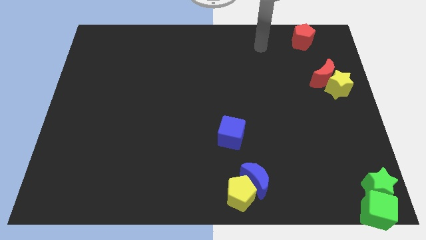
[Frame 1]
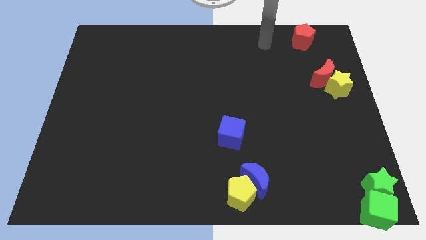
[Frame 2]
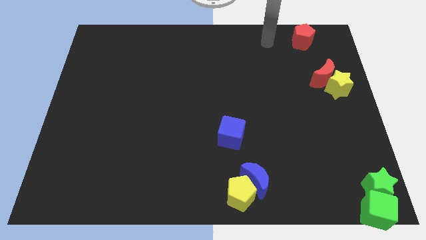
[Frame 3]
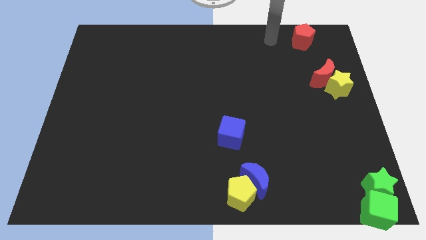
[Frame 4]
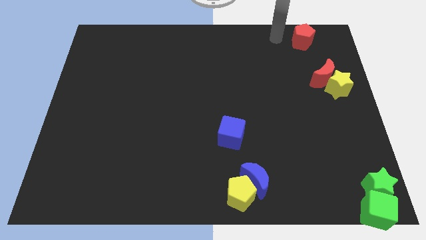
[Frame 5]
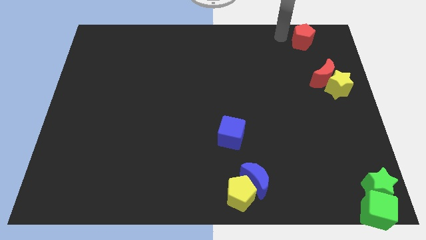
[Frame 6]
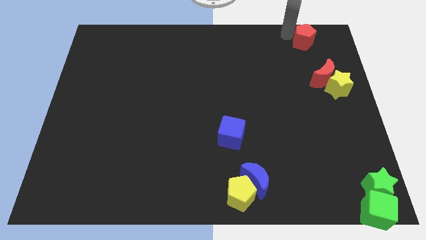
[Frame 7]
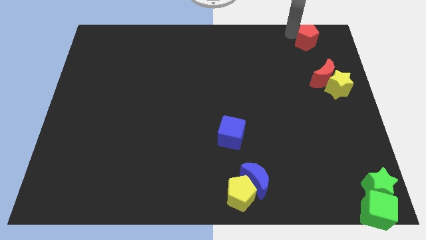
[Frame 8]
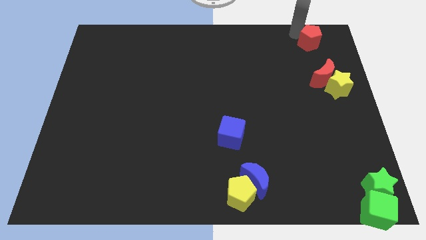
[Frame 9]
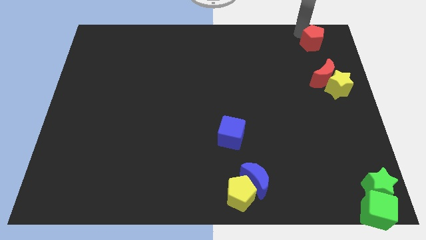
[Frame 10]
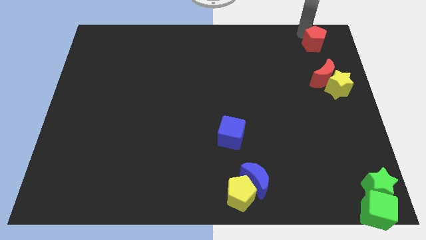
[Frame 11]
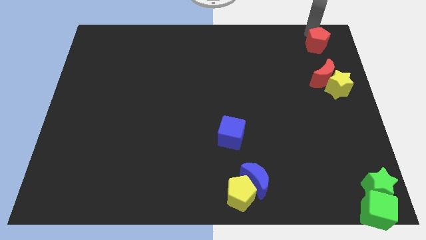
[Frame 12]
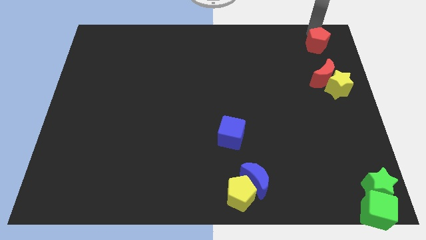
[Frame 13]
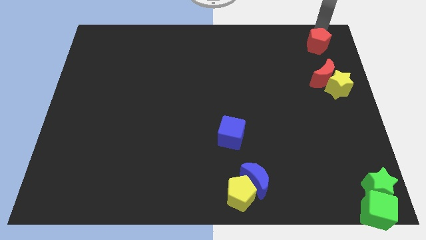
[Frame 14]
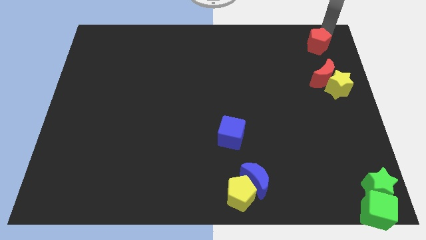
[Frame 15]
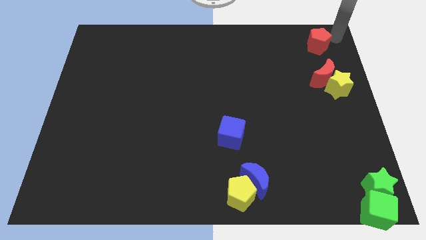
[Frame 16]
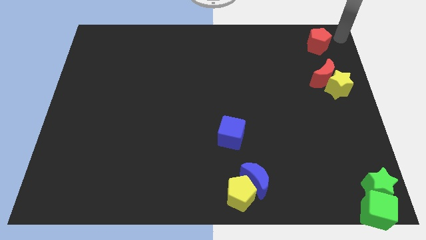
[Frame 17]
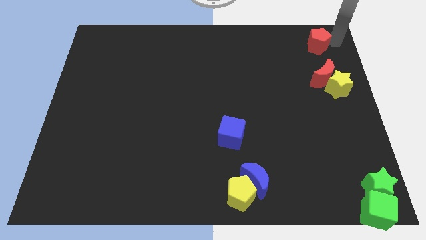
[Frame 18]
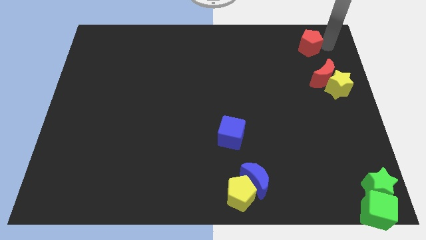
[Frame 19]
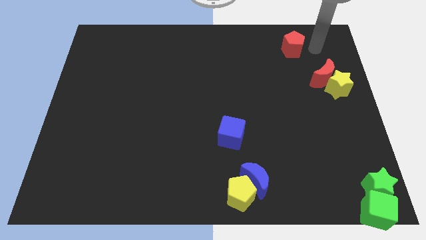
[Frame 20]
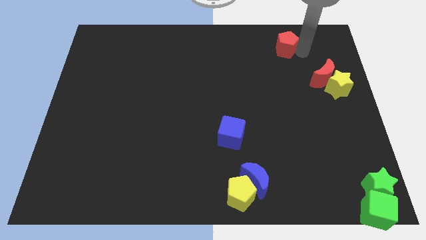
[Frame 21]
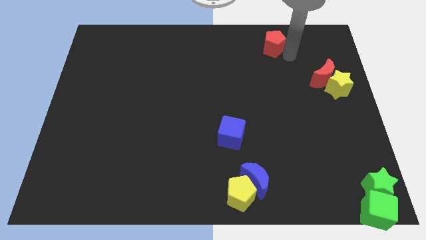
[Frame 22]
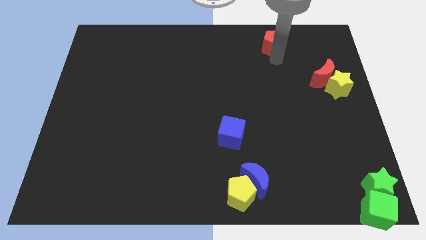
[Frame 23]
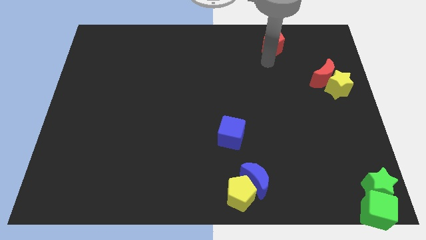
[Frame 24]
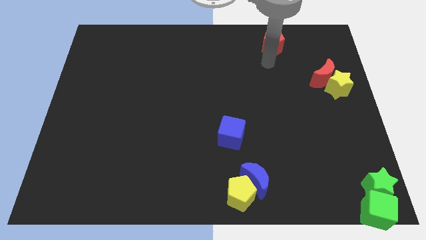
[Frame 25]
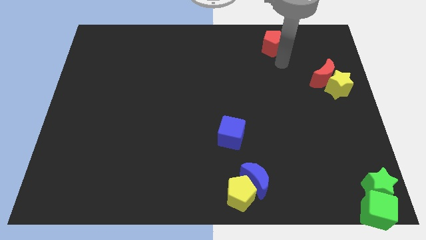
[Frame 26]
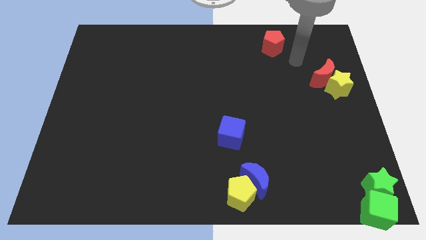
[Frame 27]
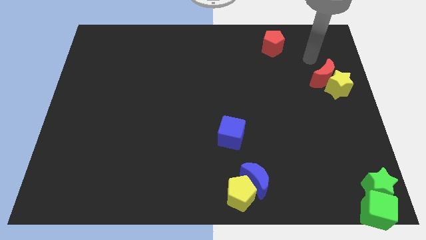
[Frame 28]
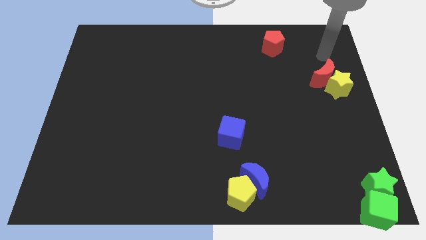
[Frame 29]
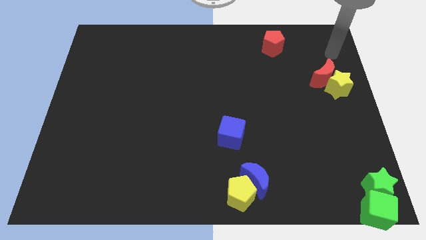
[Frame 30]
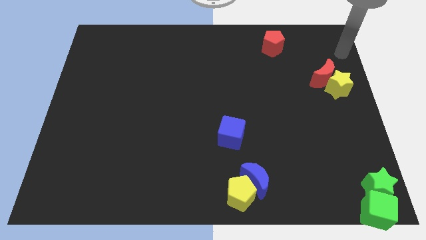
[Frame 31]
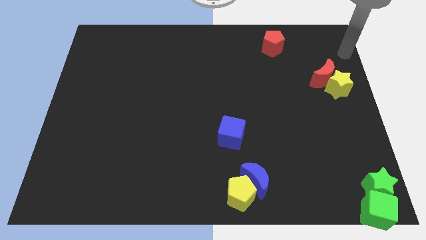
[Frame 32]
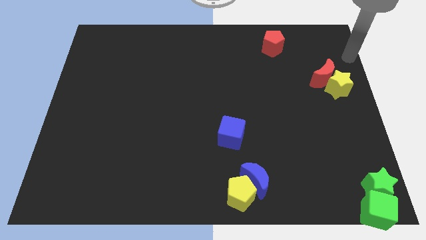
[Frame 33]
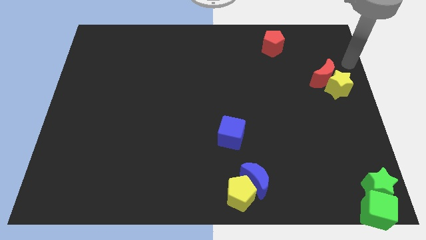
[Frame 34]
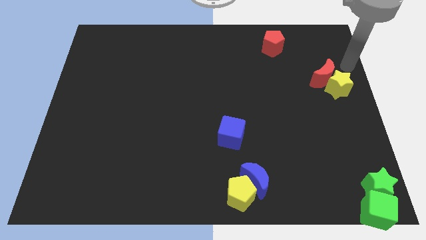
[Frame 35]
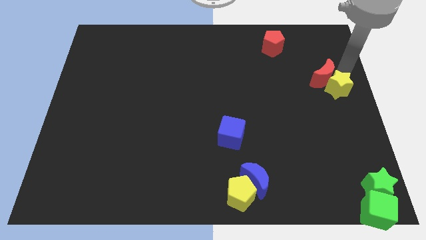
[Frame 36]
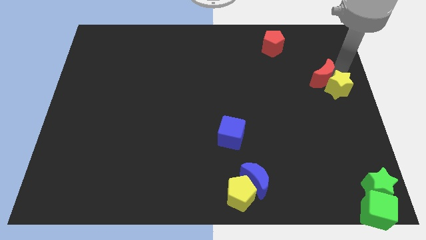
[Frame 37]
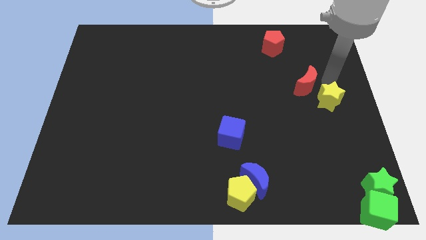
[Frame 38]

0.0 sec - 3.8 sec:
put red blocks in a vertical line

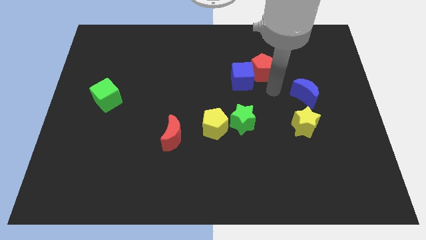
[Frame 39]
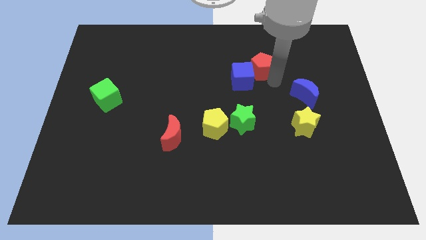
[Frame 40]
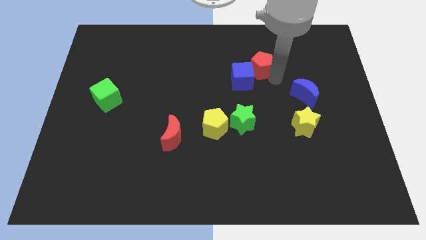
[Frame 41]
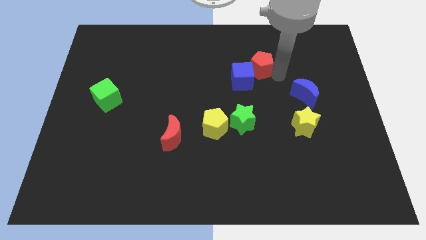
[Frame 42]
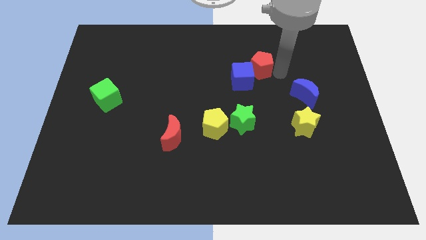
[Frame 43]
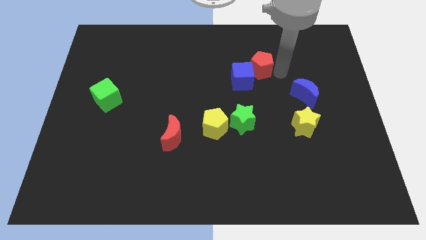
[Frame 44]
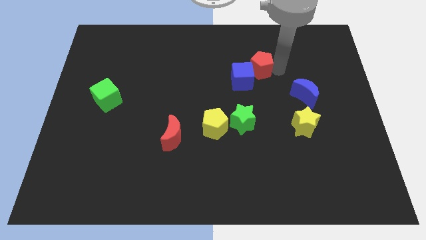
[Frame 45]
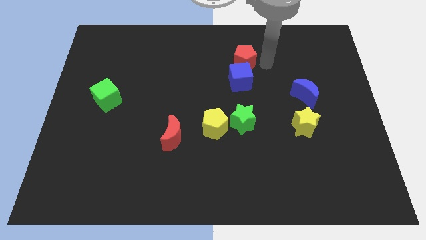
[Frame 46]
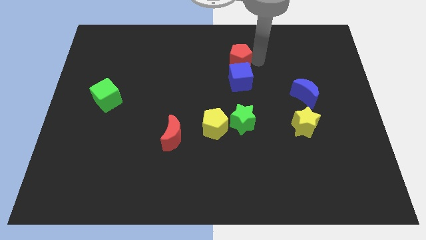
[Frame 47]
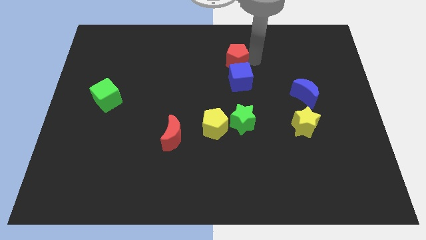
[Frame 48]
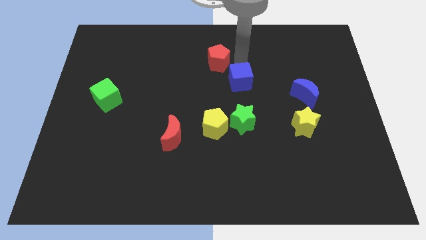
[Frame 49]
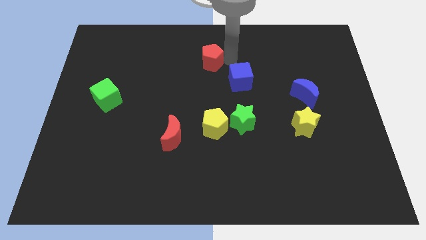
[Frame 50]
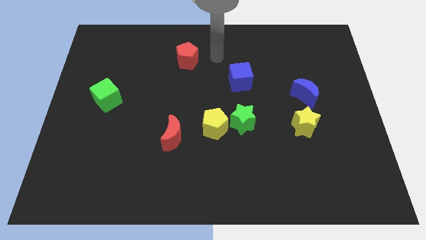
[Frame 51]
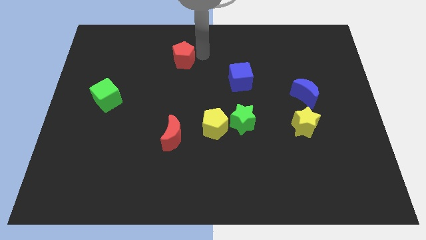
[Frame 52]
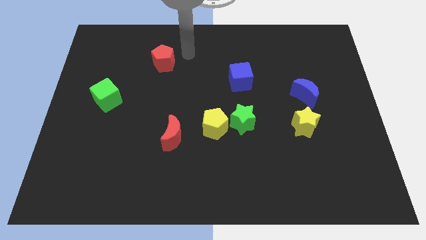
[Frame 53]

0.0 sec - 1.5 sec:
move the red pentagon to the top side of the red moon

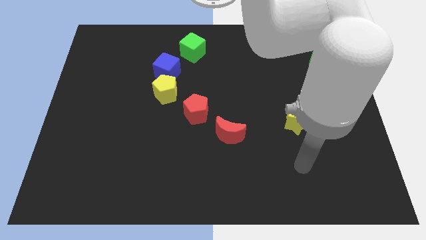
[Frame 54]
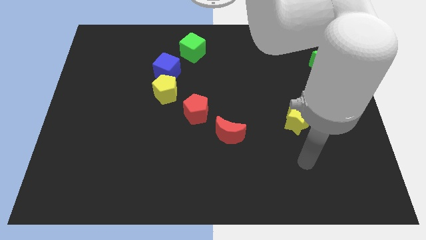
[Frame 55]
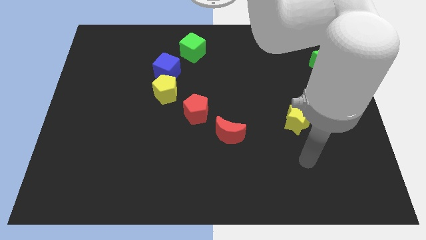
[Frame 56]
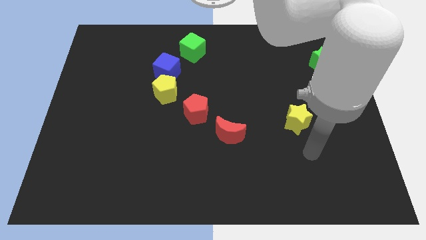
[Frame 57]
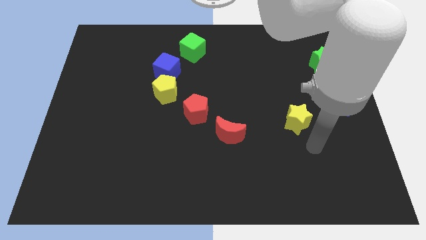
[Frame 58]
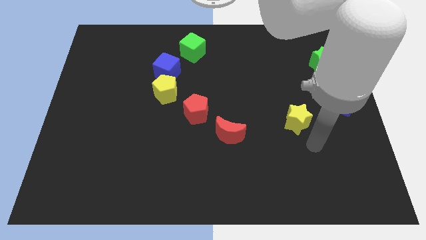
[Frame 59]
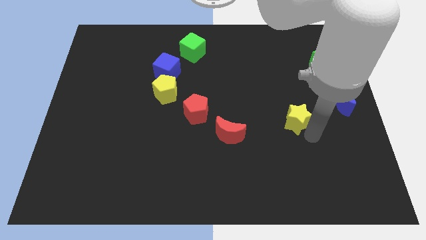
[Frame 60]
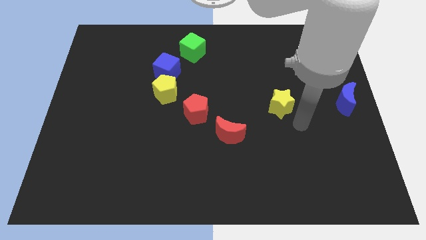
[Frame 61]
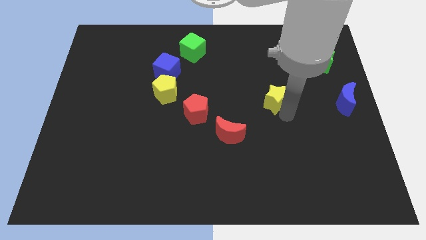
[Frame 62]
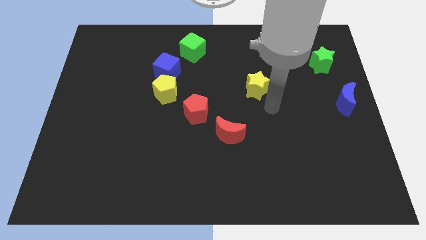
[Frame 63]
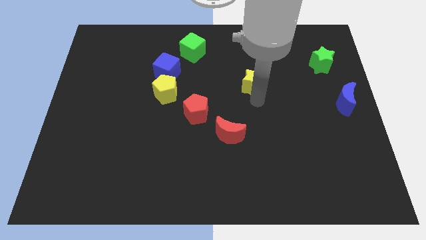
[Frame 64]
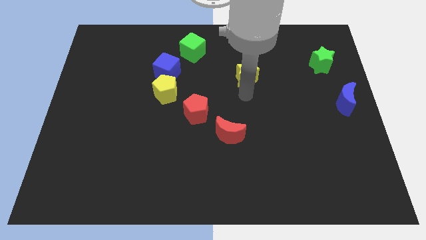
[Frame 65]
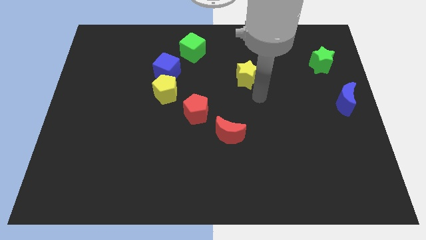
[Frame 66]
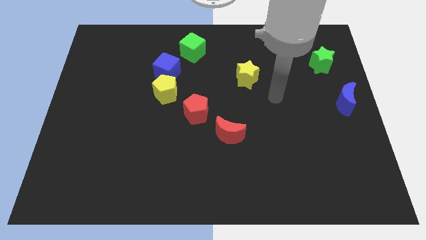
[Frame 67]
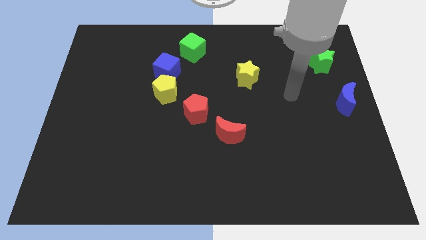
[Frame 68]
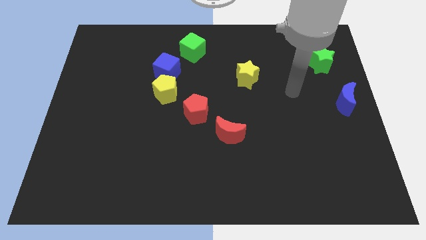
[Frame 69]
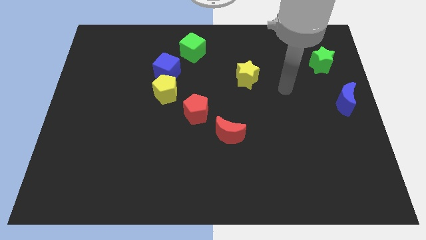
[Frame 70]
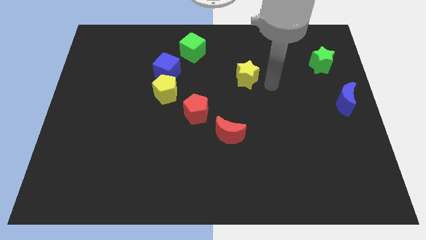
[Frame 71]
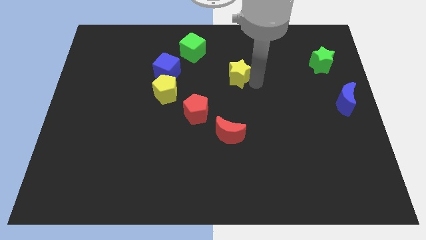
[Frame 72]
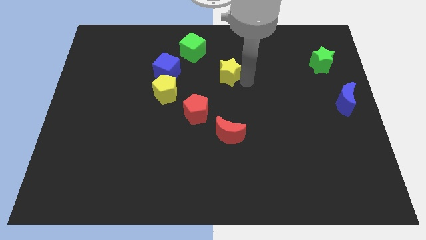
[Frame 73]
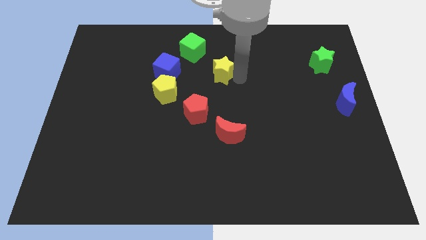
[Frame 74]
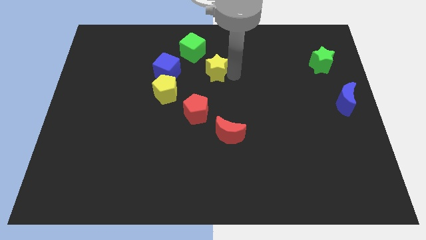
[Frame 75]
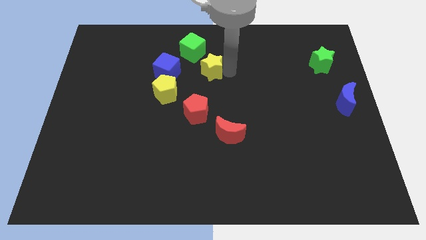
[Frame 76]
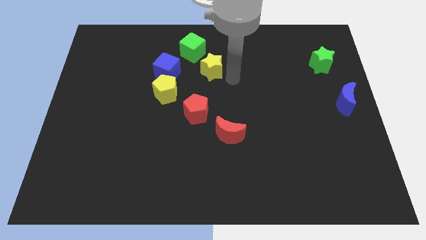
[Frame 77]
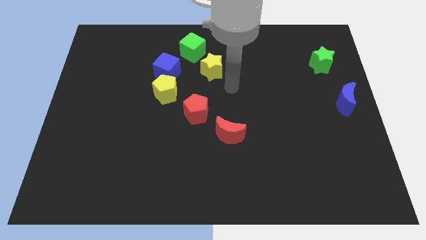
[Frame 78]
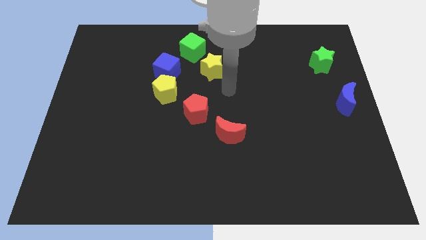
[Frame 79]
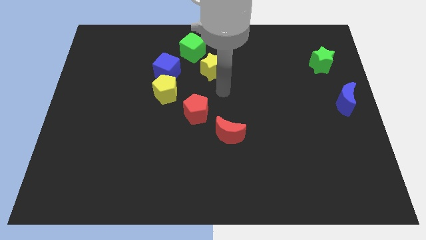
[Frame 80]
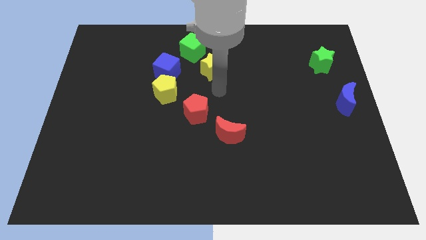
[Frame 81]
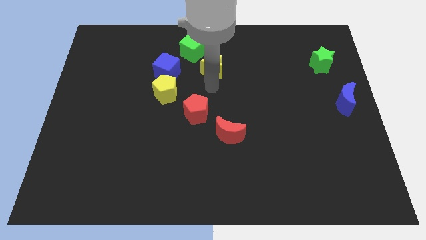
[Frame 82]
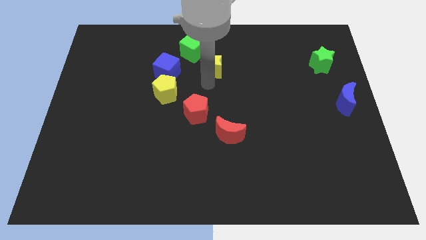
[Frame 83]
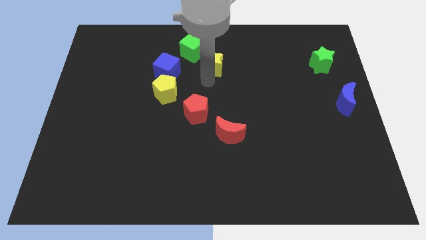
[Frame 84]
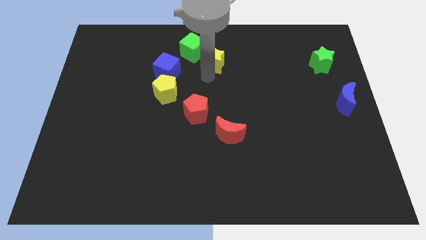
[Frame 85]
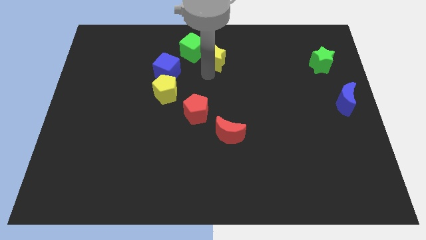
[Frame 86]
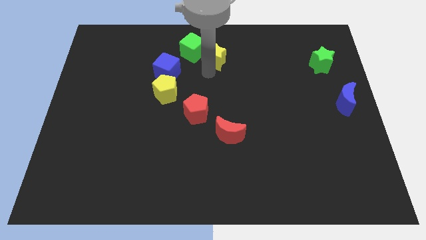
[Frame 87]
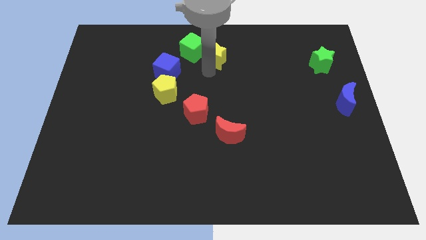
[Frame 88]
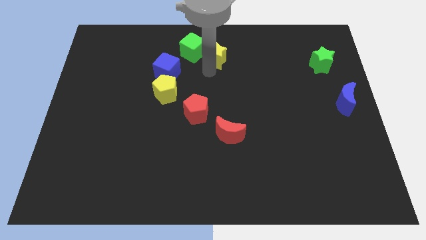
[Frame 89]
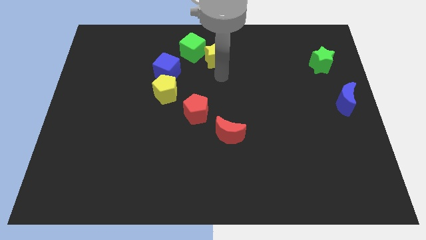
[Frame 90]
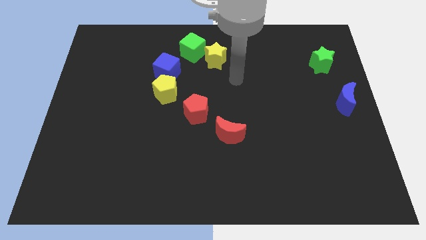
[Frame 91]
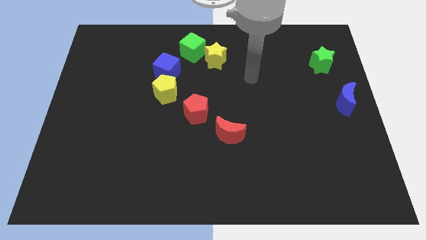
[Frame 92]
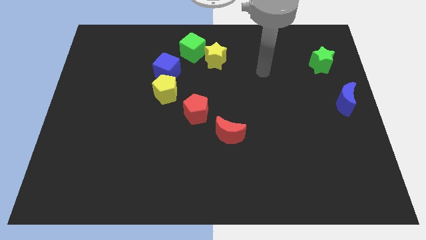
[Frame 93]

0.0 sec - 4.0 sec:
move the yellow star to the right of the green cube
